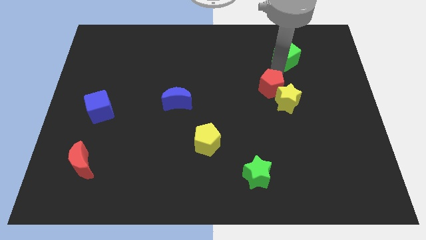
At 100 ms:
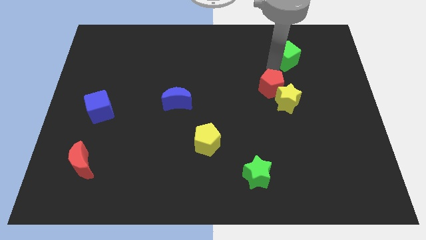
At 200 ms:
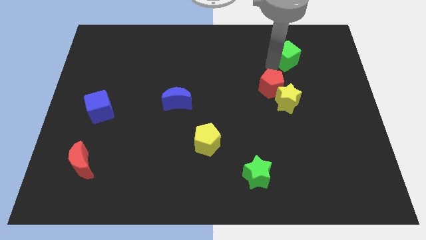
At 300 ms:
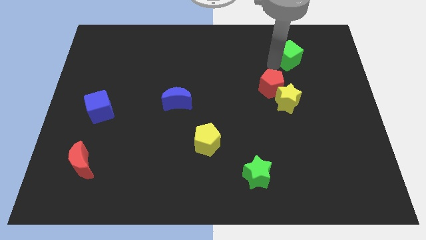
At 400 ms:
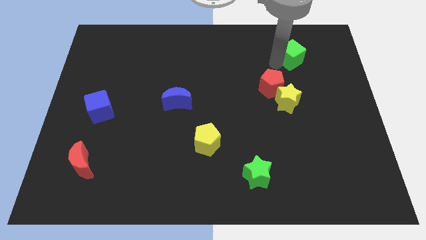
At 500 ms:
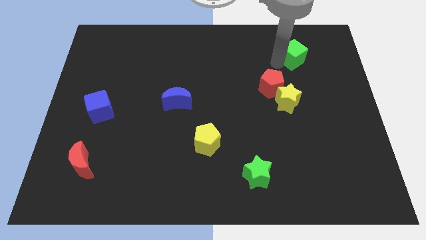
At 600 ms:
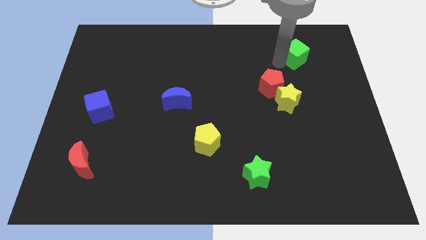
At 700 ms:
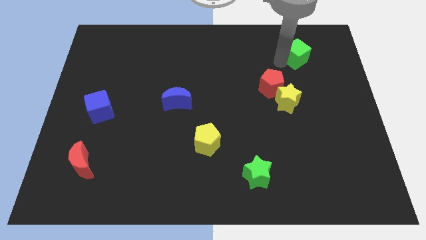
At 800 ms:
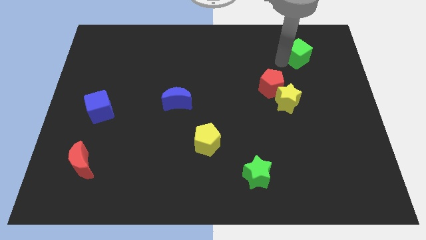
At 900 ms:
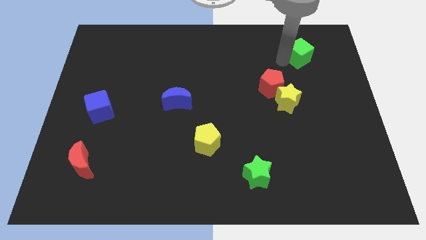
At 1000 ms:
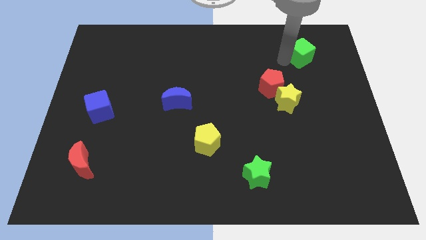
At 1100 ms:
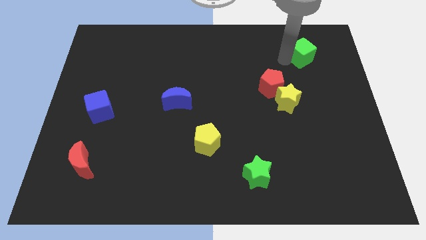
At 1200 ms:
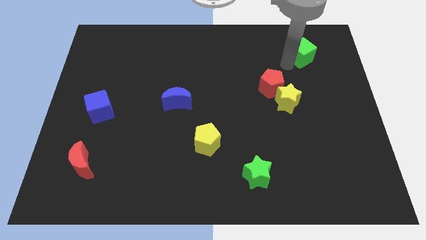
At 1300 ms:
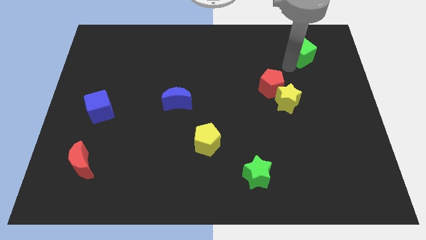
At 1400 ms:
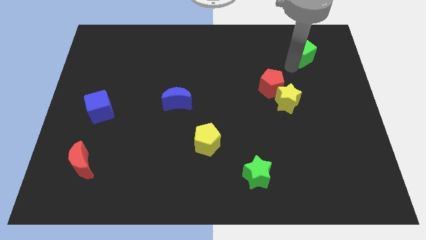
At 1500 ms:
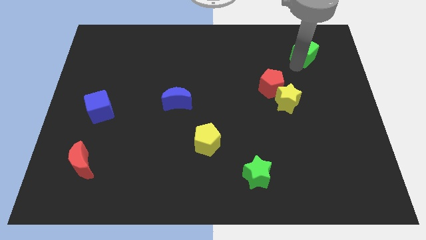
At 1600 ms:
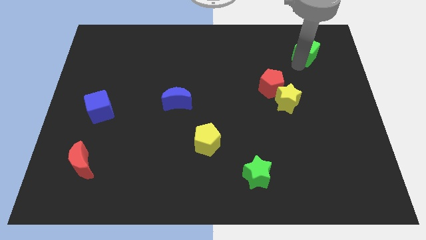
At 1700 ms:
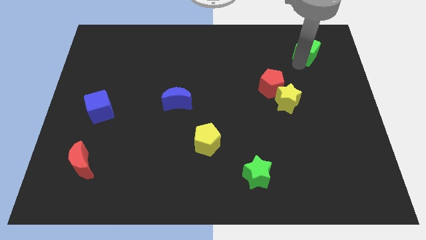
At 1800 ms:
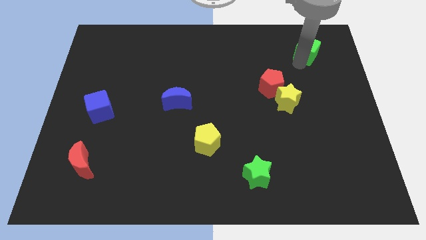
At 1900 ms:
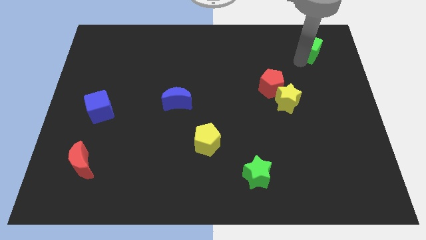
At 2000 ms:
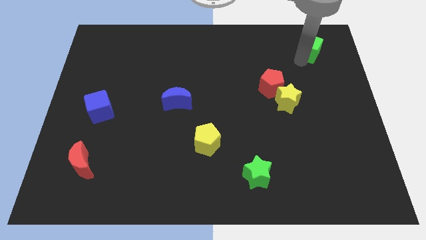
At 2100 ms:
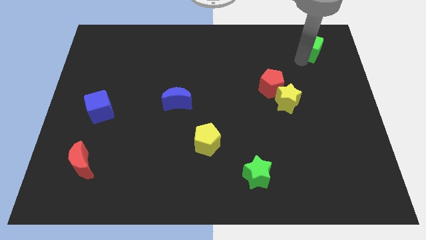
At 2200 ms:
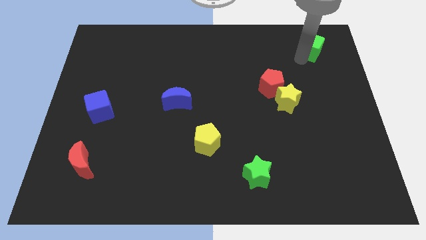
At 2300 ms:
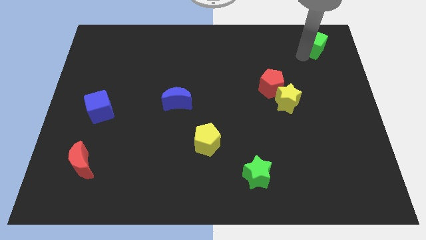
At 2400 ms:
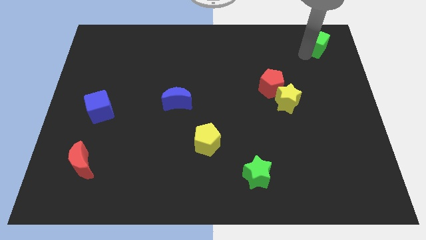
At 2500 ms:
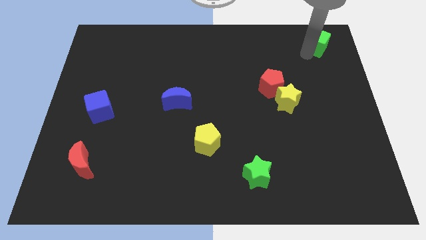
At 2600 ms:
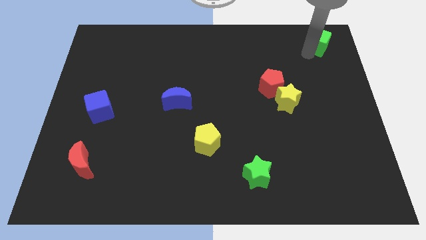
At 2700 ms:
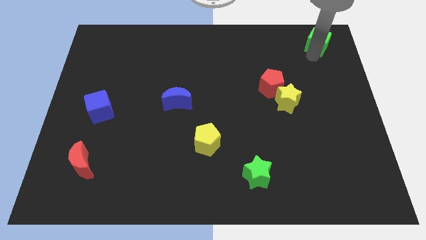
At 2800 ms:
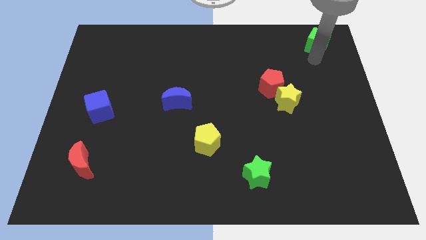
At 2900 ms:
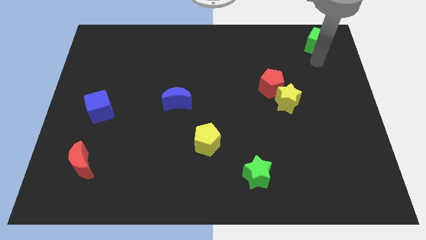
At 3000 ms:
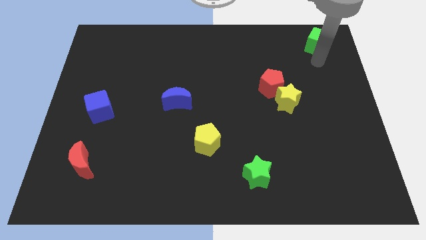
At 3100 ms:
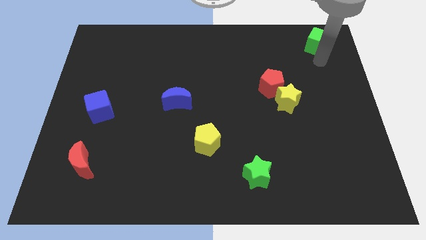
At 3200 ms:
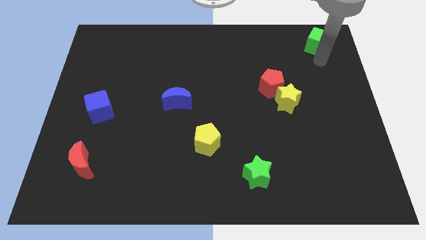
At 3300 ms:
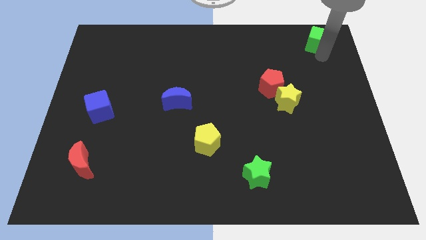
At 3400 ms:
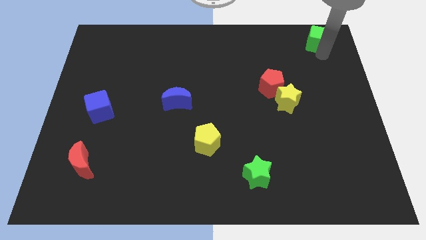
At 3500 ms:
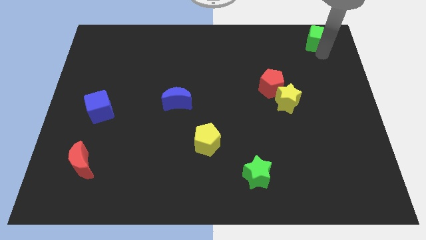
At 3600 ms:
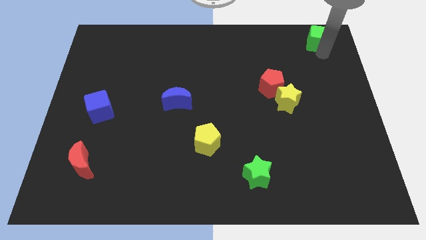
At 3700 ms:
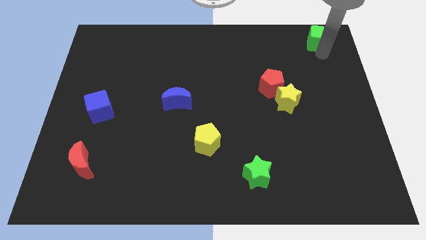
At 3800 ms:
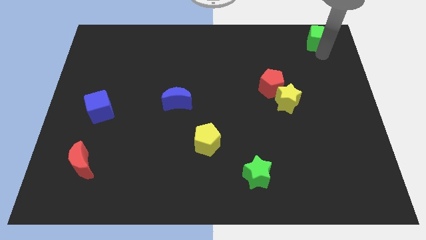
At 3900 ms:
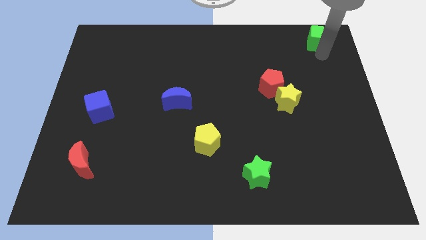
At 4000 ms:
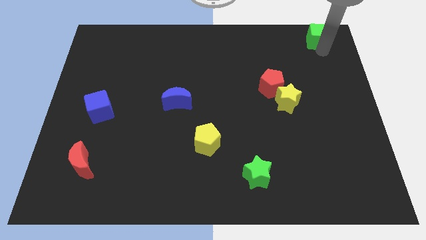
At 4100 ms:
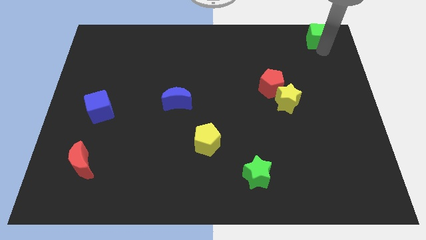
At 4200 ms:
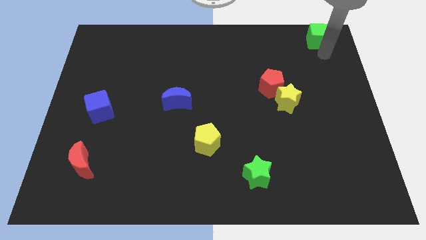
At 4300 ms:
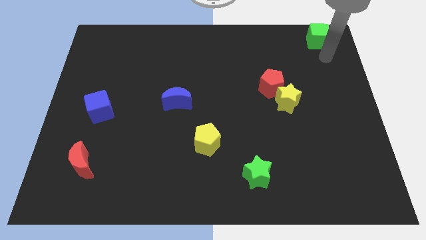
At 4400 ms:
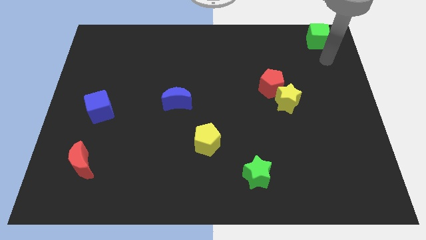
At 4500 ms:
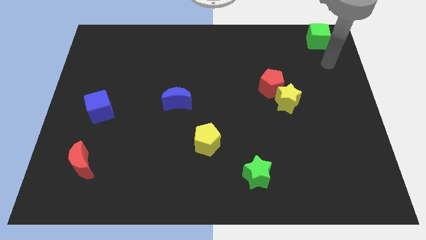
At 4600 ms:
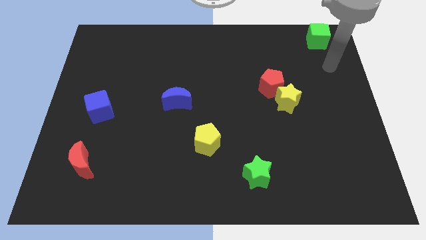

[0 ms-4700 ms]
move the green cube towards top of the board

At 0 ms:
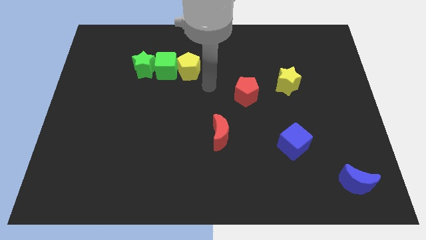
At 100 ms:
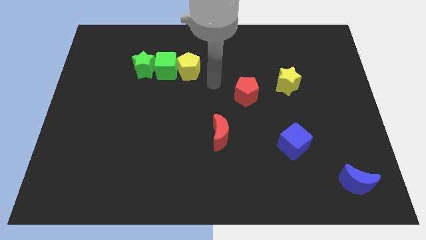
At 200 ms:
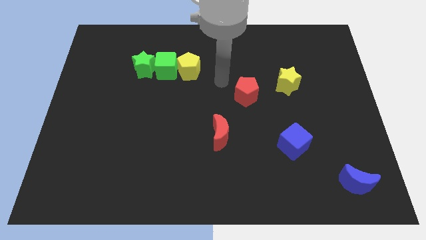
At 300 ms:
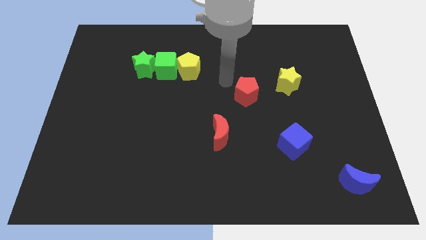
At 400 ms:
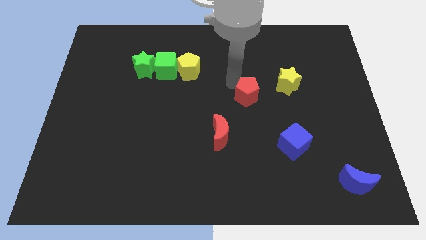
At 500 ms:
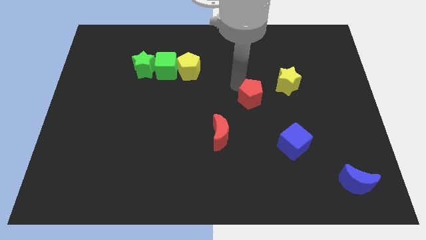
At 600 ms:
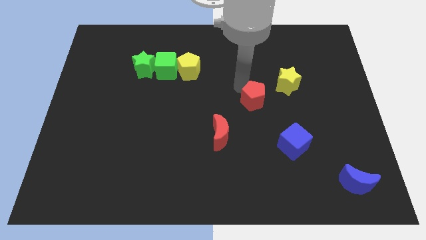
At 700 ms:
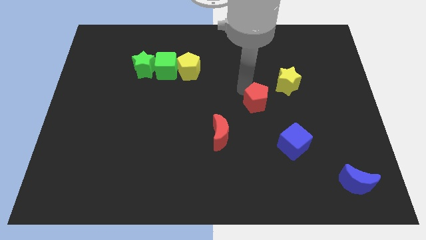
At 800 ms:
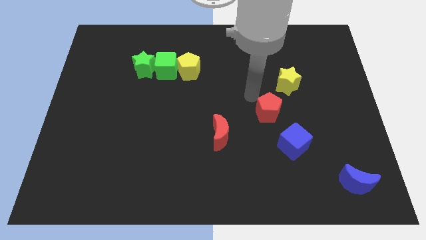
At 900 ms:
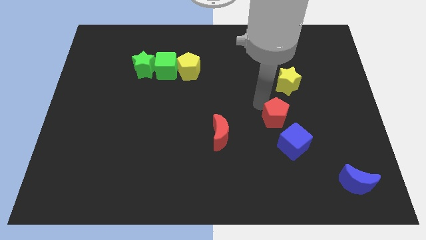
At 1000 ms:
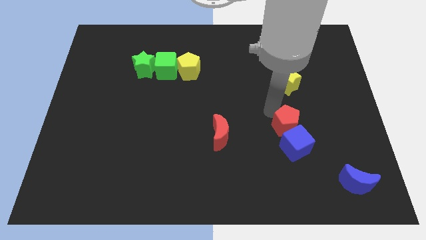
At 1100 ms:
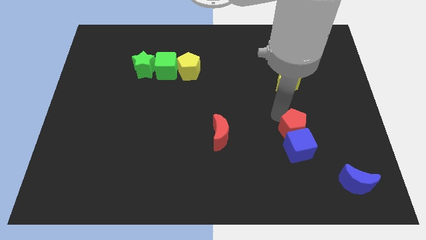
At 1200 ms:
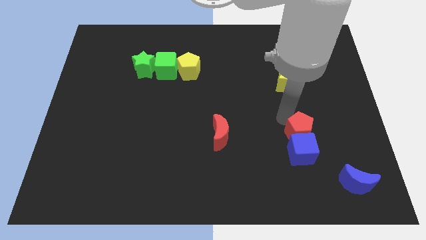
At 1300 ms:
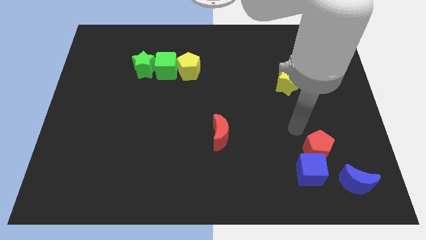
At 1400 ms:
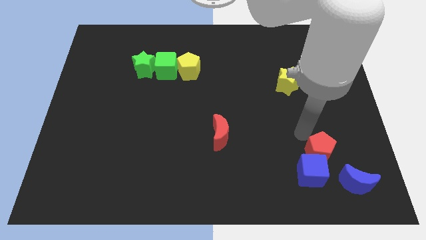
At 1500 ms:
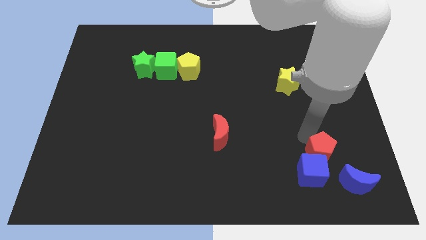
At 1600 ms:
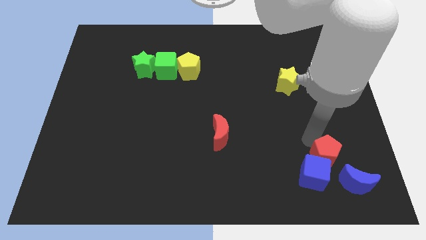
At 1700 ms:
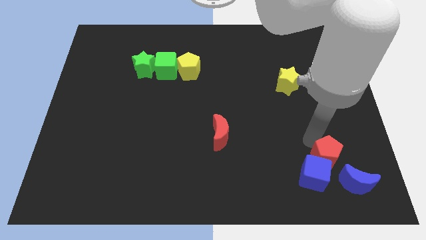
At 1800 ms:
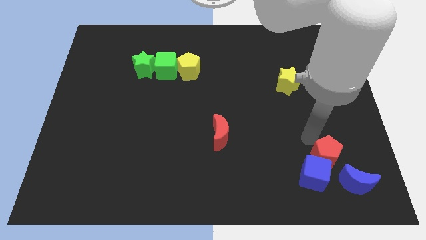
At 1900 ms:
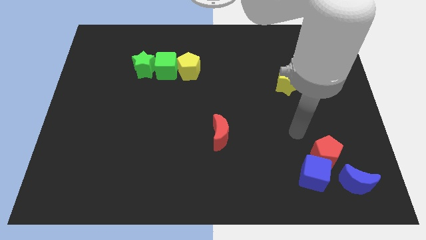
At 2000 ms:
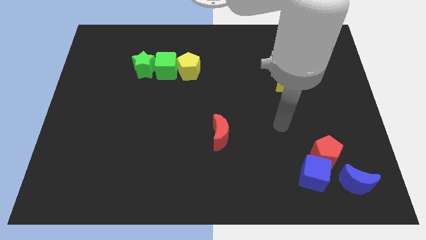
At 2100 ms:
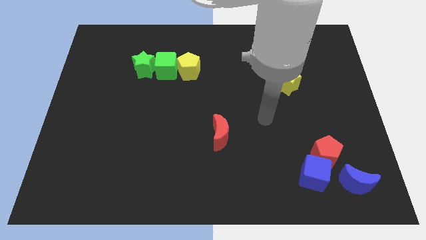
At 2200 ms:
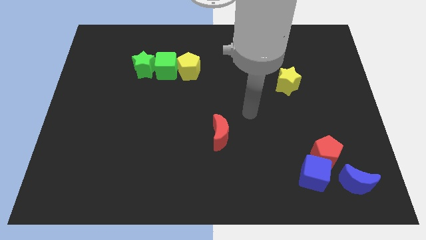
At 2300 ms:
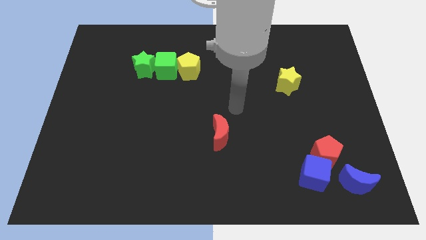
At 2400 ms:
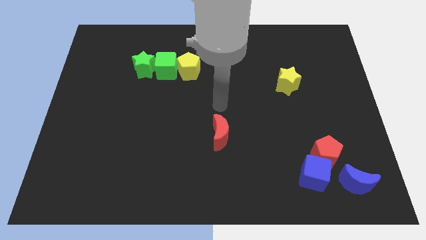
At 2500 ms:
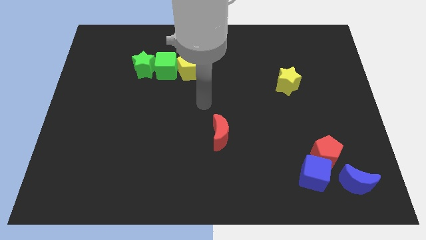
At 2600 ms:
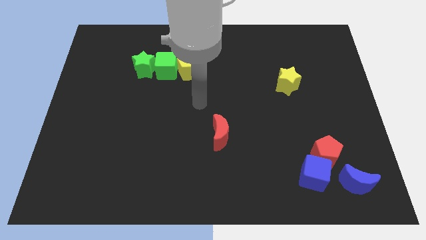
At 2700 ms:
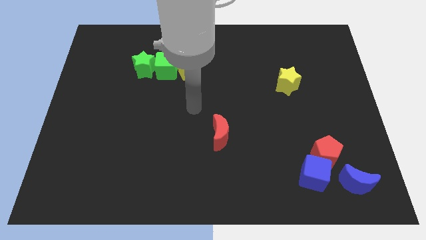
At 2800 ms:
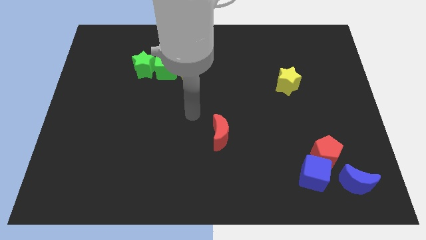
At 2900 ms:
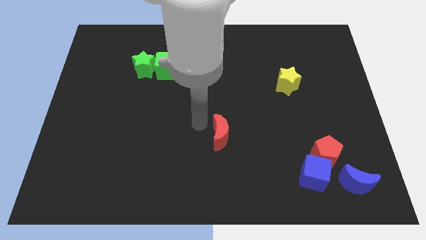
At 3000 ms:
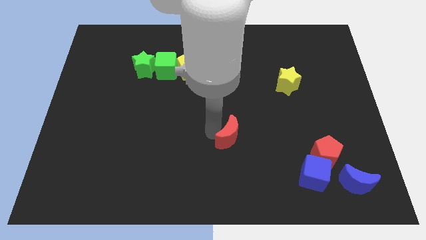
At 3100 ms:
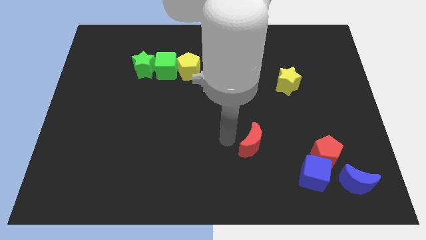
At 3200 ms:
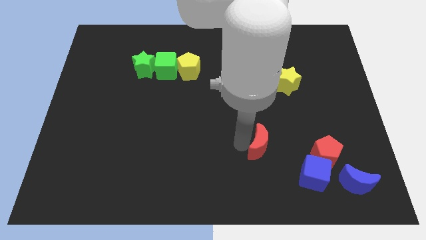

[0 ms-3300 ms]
move red pentagon into the blue cube

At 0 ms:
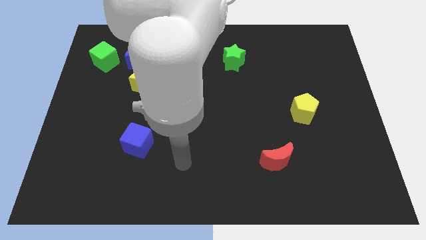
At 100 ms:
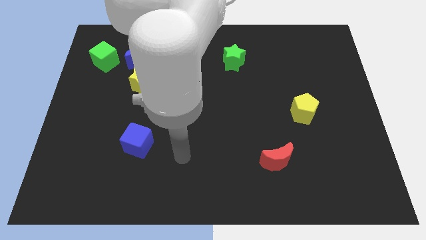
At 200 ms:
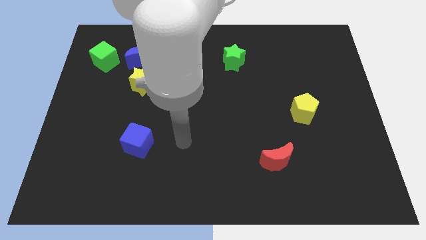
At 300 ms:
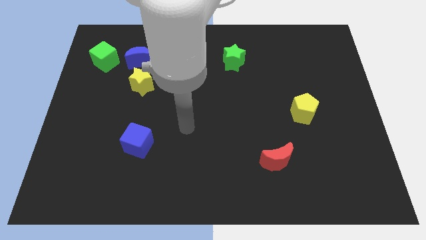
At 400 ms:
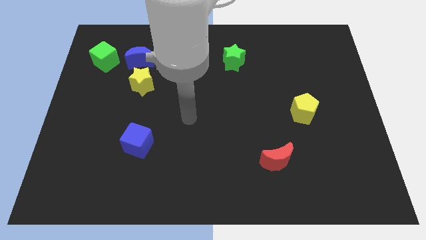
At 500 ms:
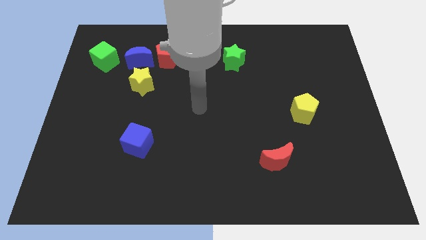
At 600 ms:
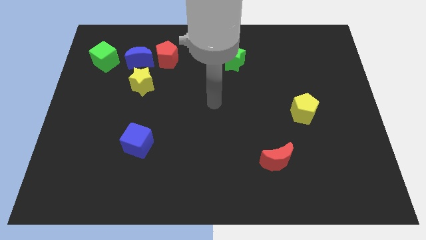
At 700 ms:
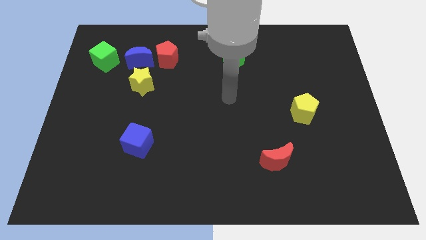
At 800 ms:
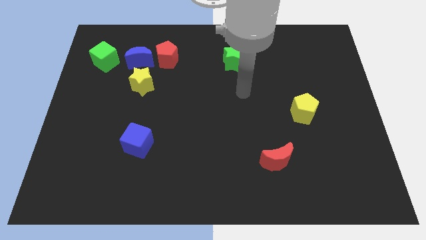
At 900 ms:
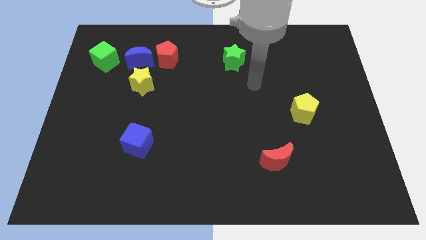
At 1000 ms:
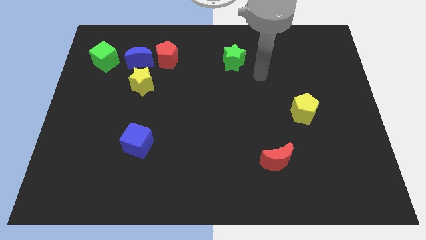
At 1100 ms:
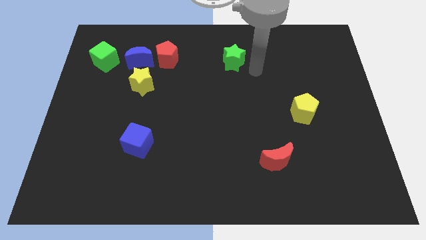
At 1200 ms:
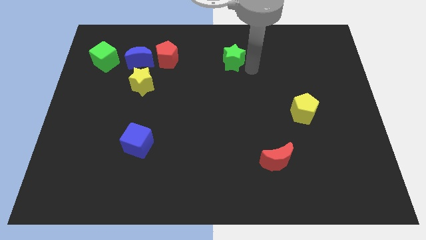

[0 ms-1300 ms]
place your hand to the right of the green star
